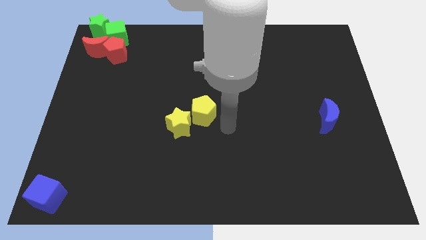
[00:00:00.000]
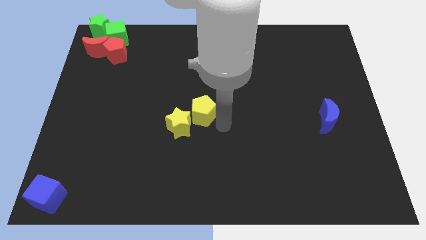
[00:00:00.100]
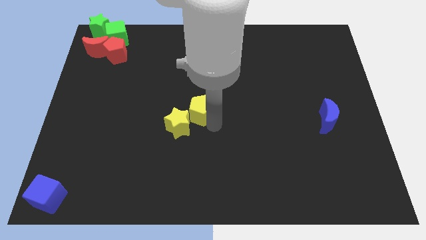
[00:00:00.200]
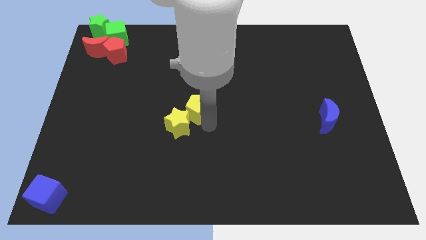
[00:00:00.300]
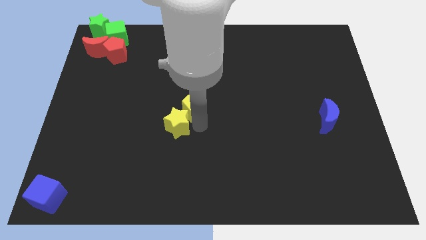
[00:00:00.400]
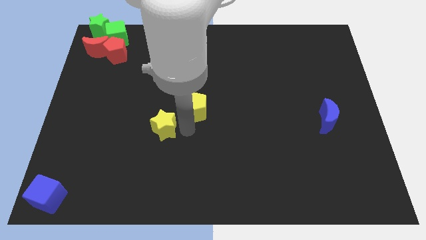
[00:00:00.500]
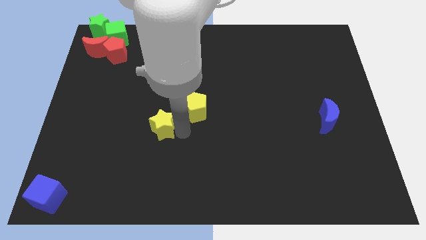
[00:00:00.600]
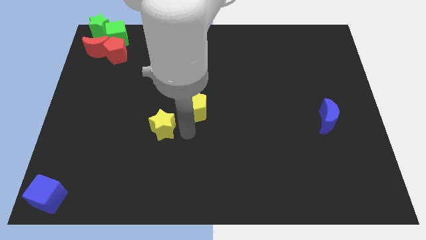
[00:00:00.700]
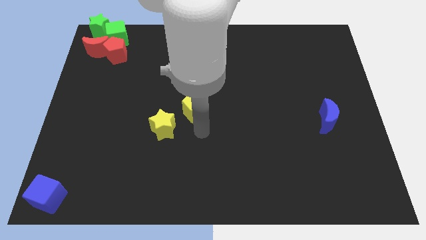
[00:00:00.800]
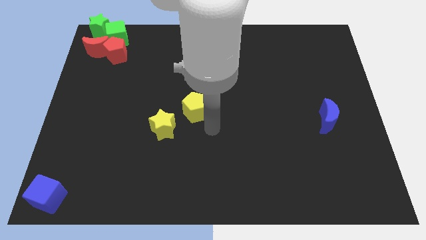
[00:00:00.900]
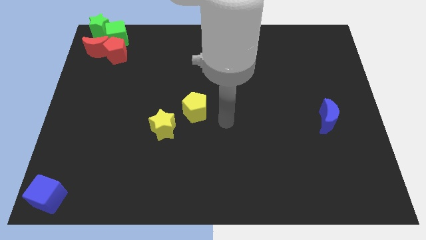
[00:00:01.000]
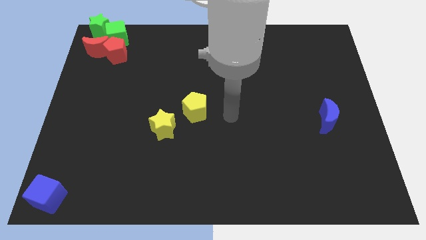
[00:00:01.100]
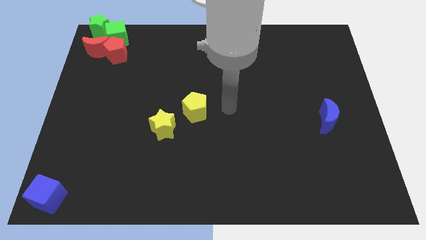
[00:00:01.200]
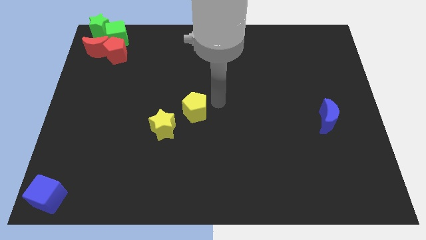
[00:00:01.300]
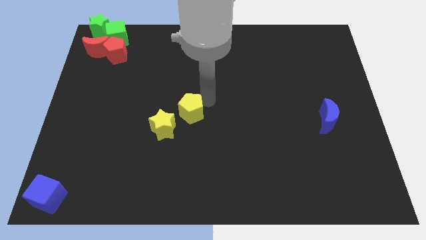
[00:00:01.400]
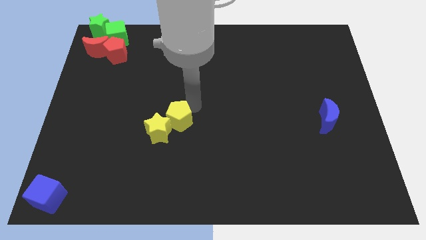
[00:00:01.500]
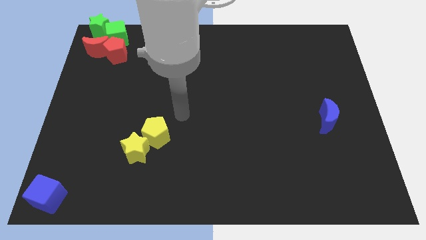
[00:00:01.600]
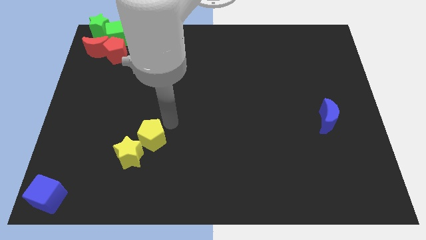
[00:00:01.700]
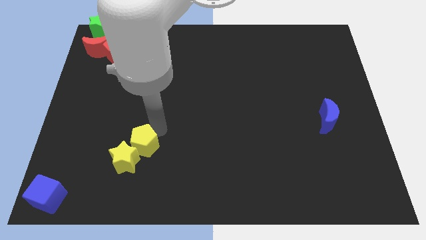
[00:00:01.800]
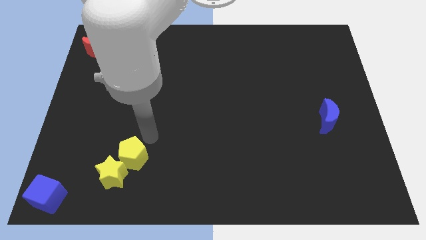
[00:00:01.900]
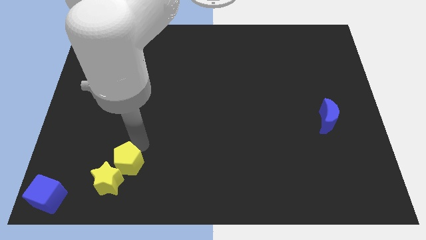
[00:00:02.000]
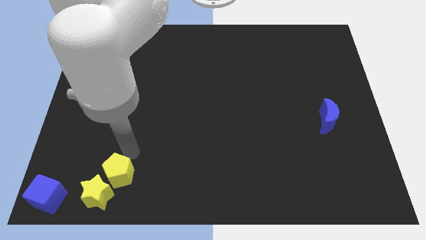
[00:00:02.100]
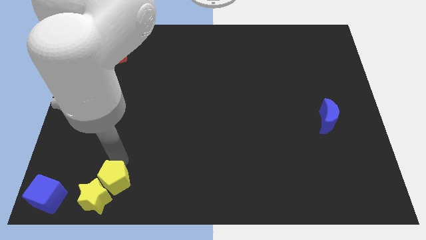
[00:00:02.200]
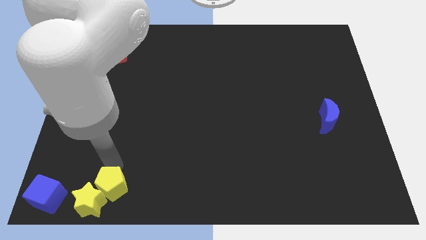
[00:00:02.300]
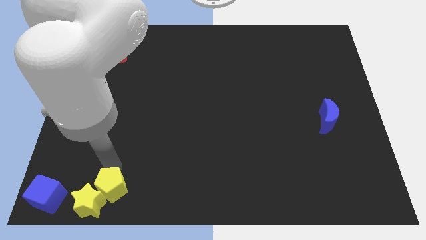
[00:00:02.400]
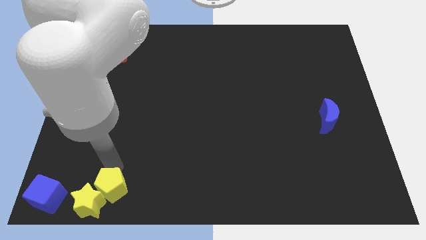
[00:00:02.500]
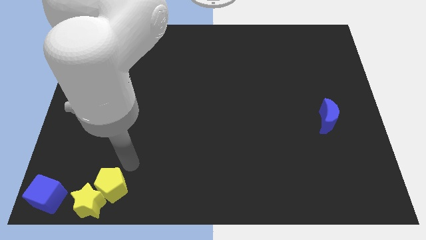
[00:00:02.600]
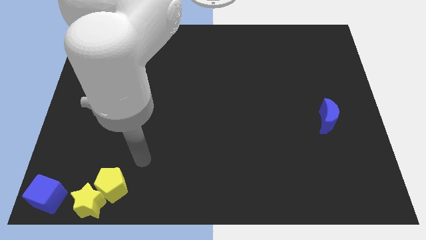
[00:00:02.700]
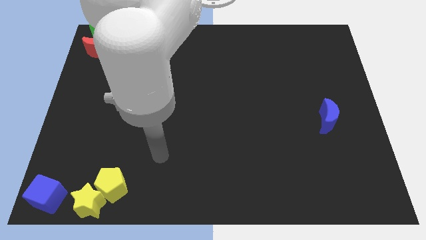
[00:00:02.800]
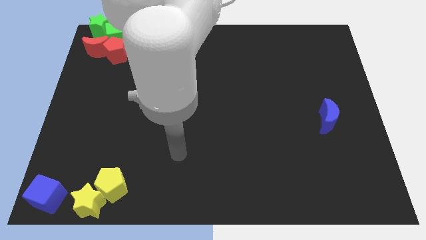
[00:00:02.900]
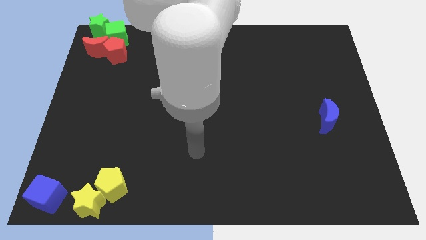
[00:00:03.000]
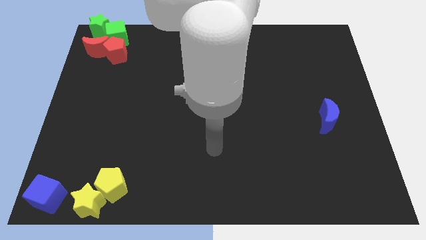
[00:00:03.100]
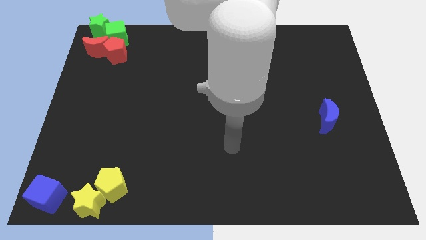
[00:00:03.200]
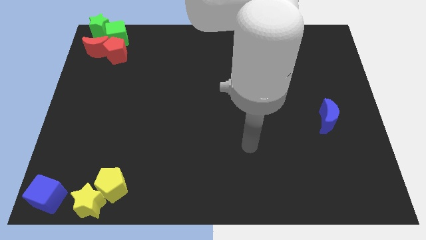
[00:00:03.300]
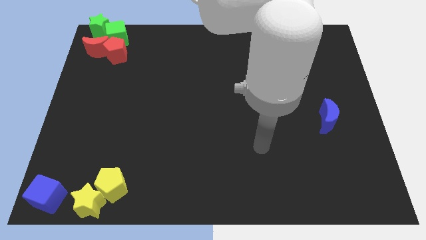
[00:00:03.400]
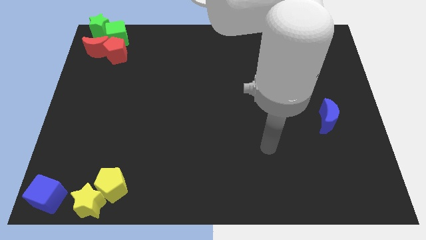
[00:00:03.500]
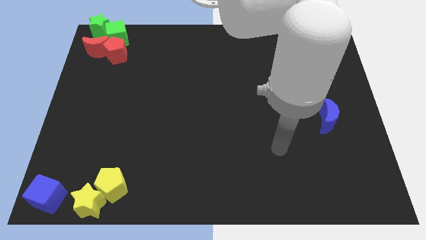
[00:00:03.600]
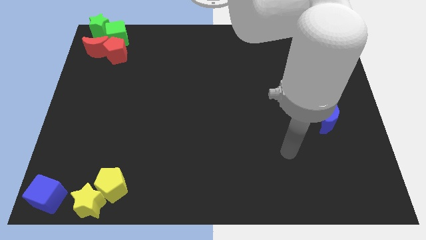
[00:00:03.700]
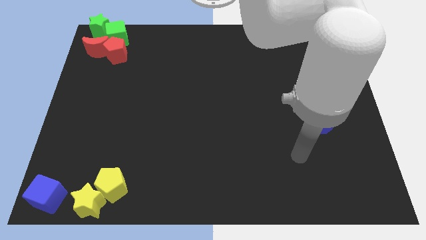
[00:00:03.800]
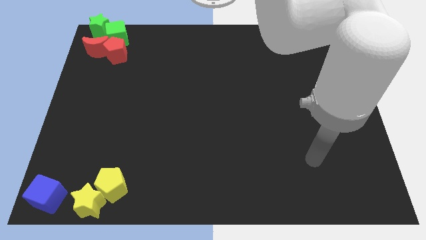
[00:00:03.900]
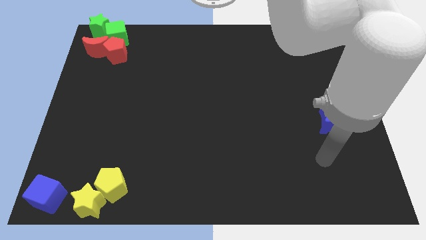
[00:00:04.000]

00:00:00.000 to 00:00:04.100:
move yellow blocks to the bottom left

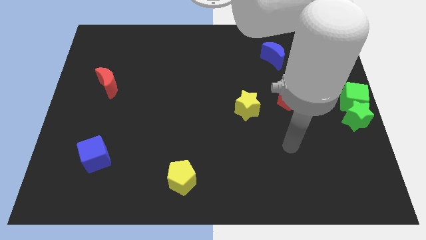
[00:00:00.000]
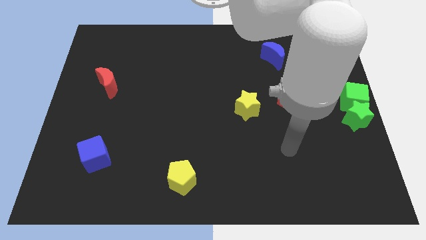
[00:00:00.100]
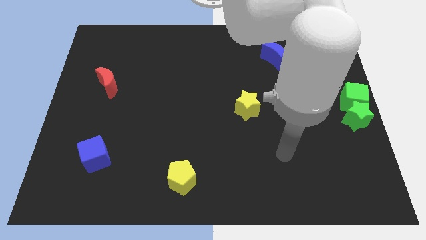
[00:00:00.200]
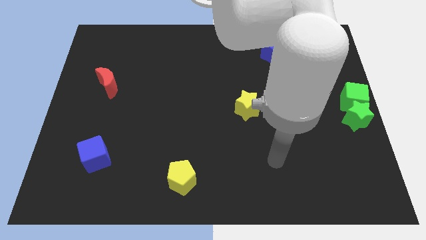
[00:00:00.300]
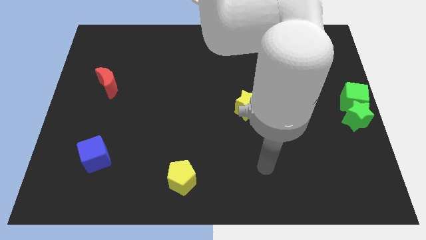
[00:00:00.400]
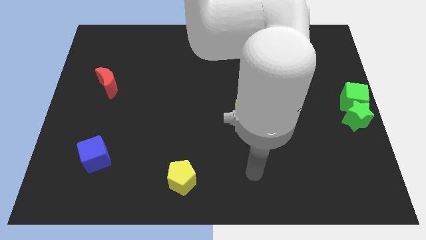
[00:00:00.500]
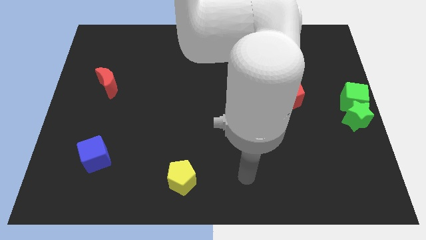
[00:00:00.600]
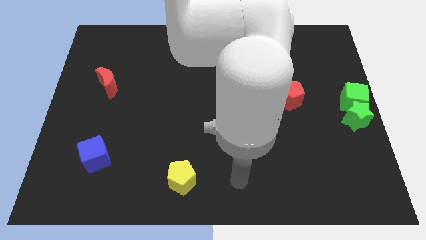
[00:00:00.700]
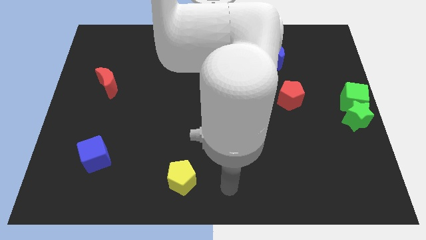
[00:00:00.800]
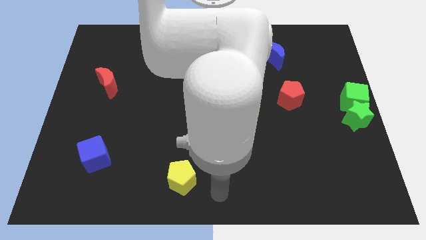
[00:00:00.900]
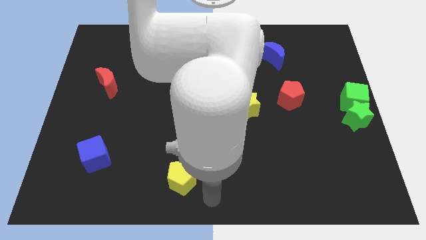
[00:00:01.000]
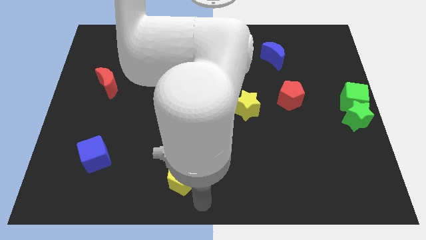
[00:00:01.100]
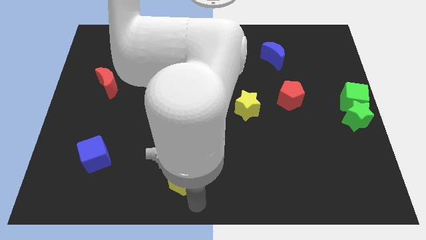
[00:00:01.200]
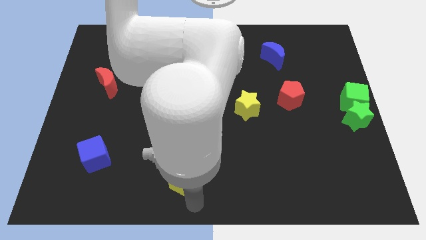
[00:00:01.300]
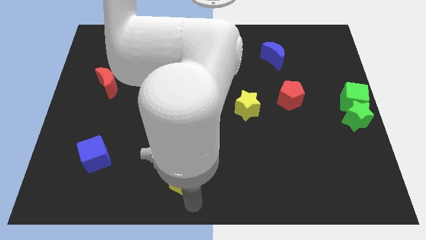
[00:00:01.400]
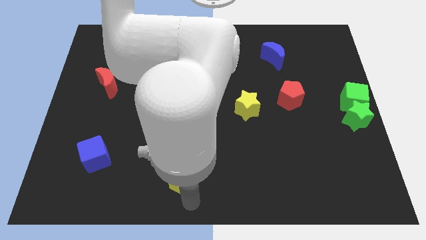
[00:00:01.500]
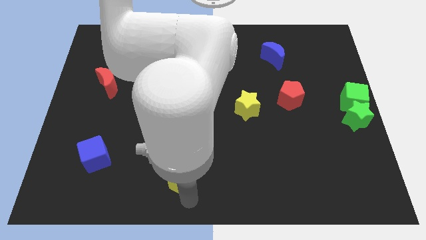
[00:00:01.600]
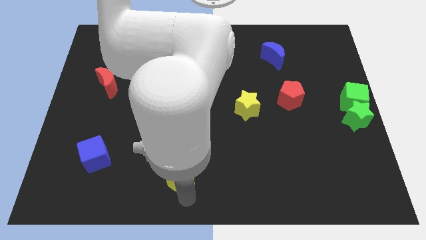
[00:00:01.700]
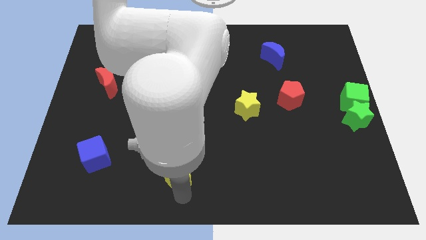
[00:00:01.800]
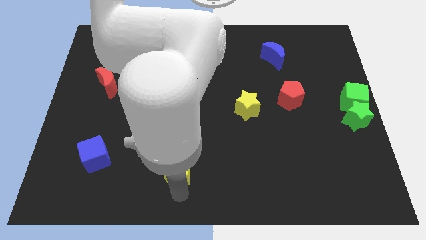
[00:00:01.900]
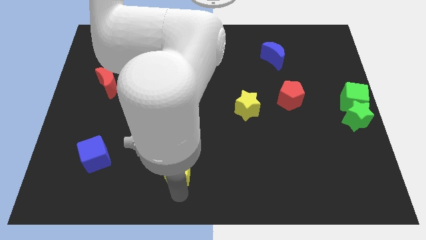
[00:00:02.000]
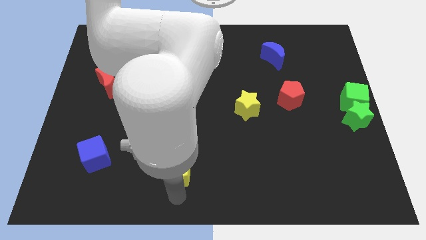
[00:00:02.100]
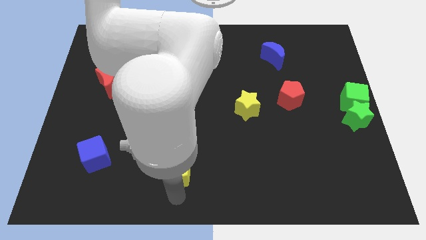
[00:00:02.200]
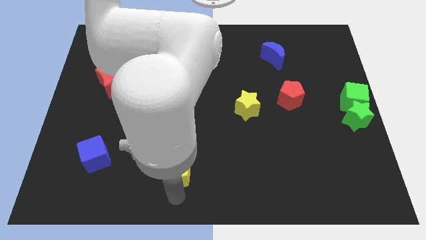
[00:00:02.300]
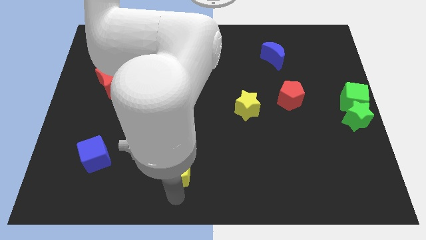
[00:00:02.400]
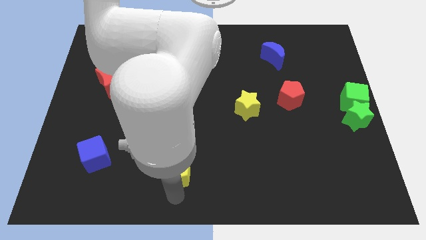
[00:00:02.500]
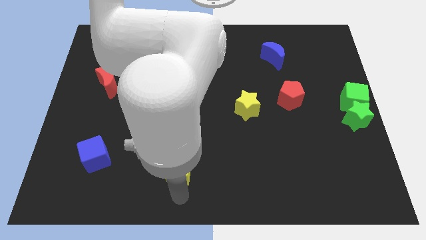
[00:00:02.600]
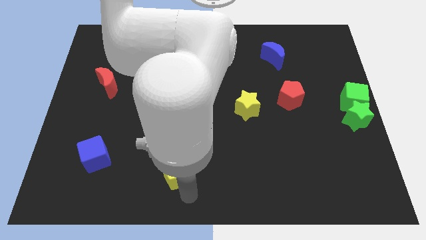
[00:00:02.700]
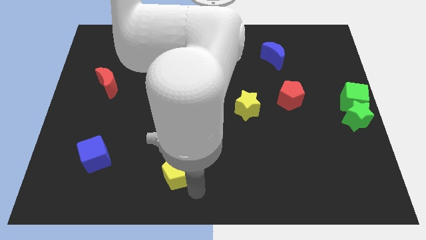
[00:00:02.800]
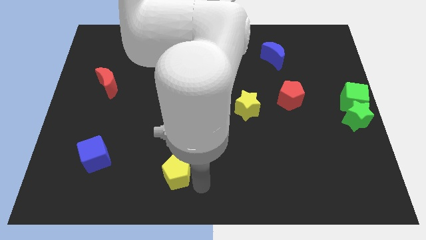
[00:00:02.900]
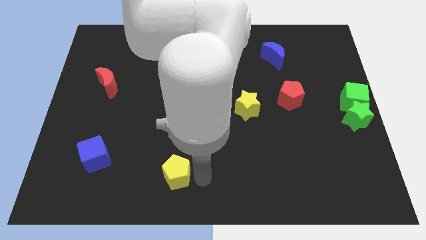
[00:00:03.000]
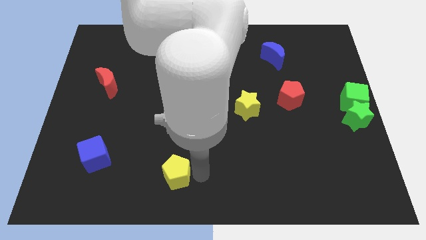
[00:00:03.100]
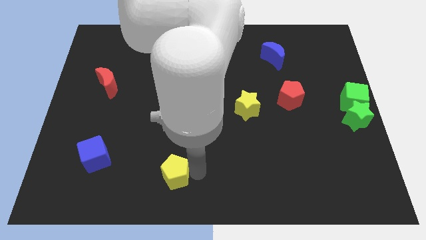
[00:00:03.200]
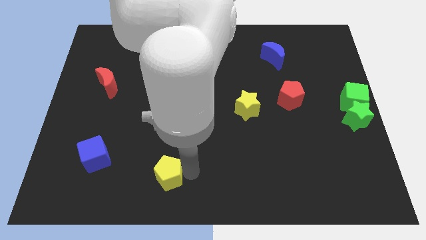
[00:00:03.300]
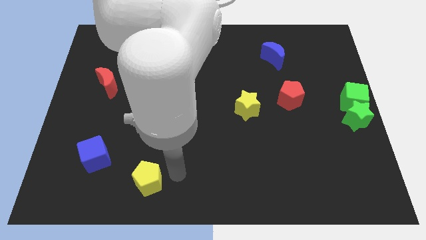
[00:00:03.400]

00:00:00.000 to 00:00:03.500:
move the yellow pentagon diagonally to blue cube

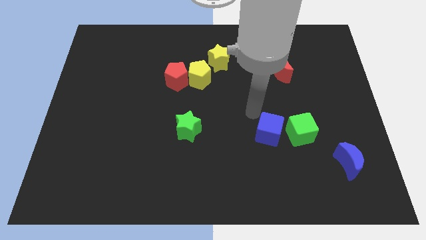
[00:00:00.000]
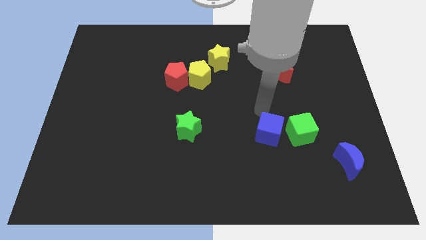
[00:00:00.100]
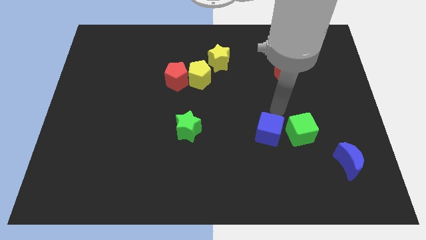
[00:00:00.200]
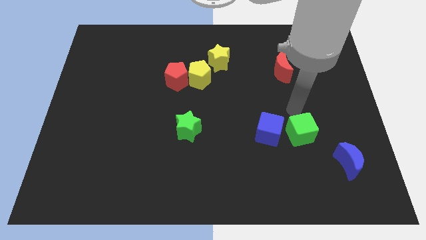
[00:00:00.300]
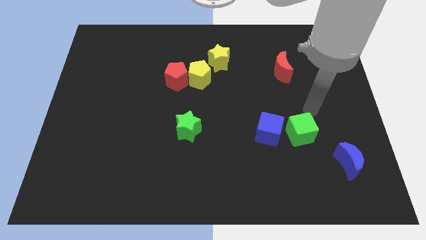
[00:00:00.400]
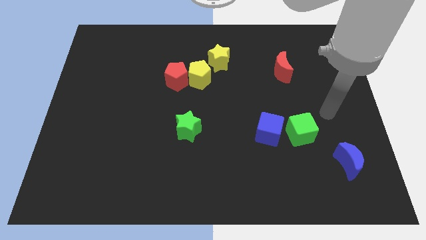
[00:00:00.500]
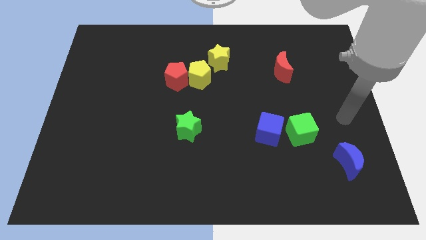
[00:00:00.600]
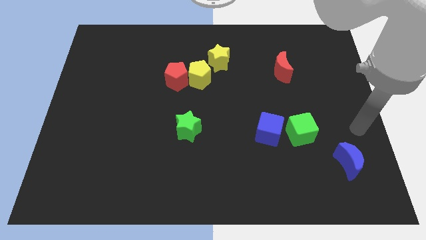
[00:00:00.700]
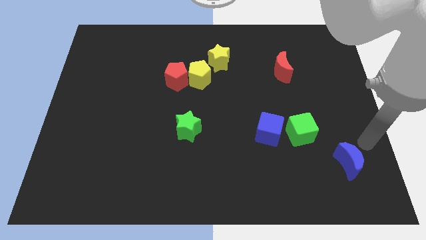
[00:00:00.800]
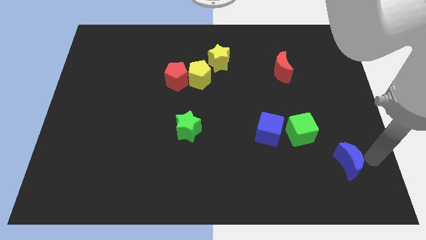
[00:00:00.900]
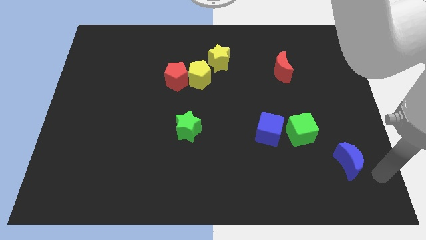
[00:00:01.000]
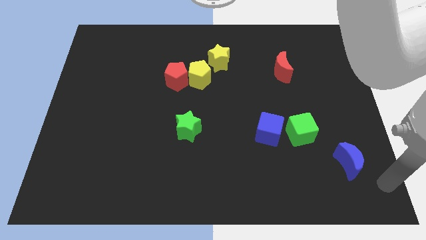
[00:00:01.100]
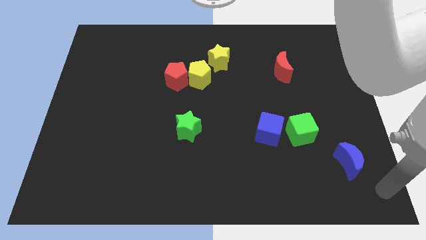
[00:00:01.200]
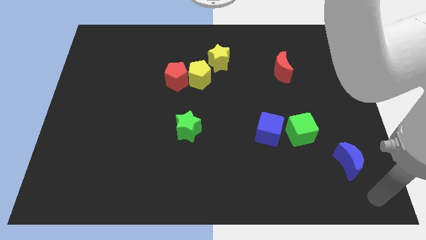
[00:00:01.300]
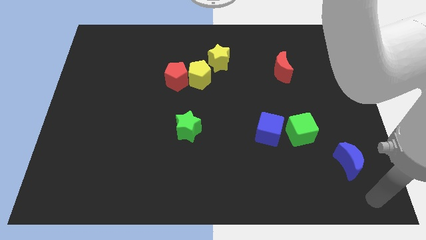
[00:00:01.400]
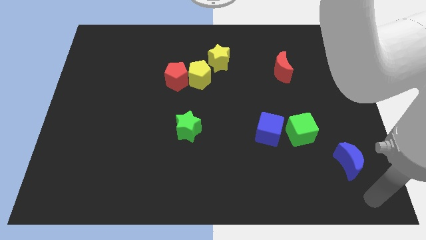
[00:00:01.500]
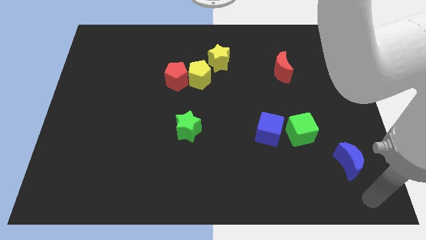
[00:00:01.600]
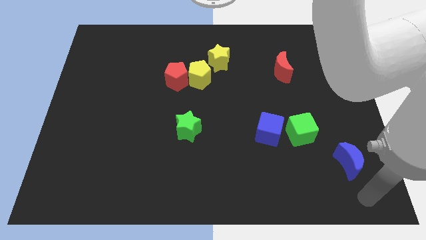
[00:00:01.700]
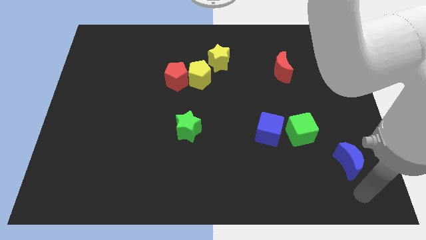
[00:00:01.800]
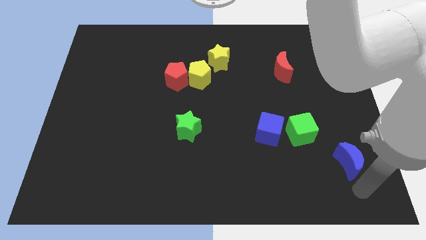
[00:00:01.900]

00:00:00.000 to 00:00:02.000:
move your arm up and to the right
